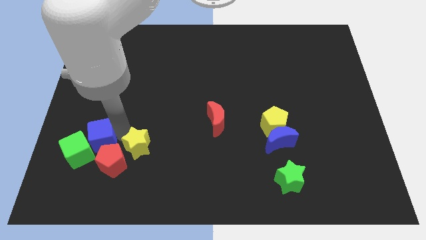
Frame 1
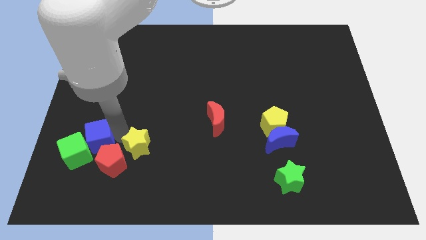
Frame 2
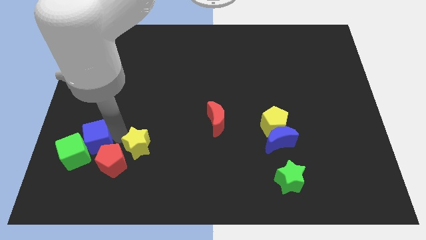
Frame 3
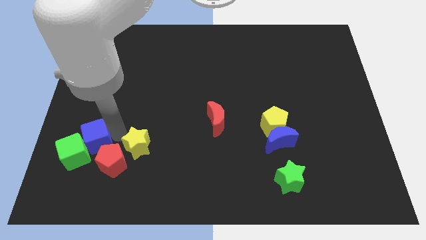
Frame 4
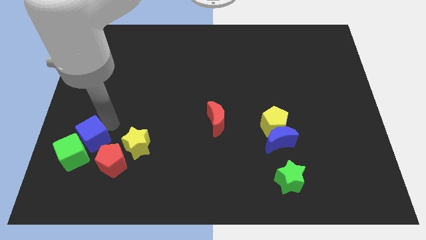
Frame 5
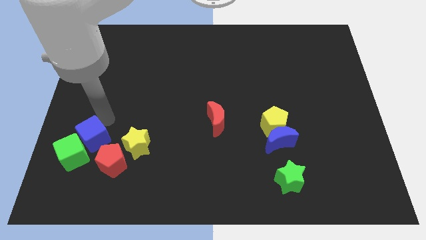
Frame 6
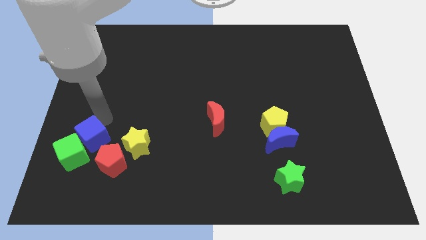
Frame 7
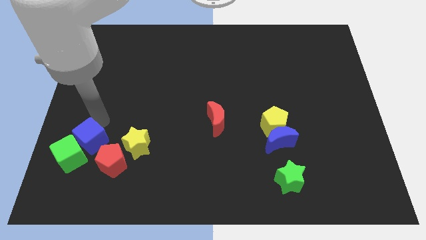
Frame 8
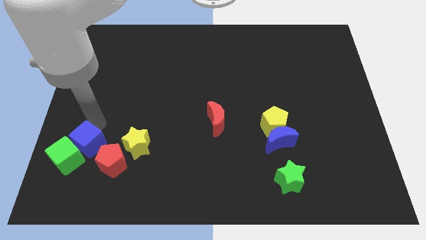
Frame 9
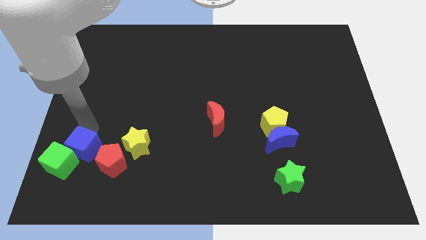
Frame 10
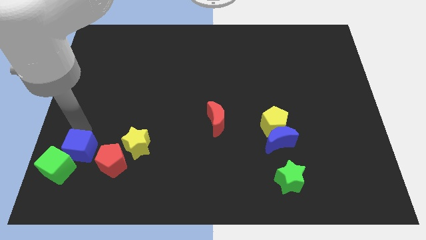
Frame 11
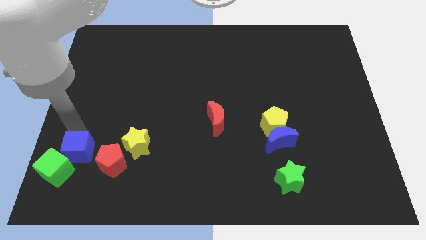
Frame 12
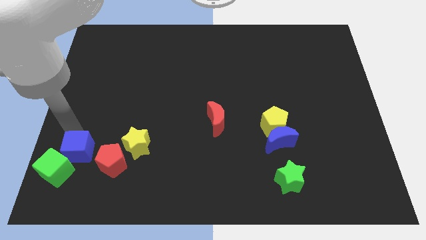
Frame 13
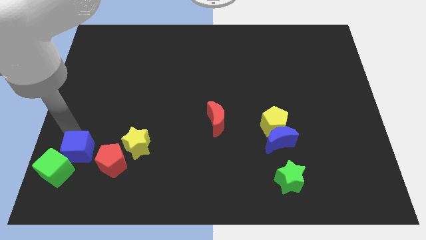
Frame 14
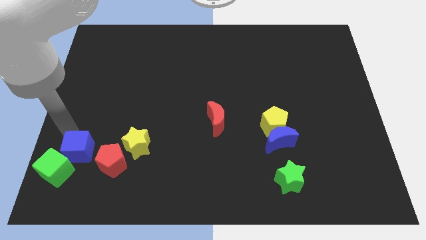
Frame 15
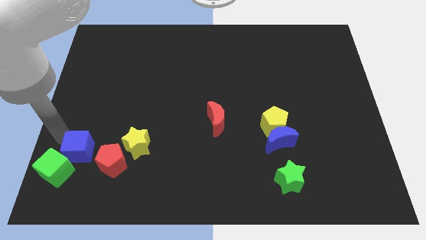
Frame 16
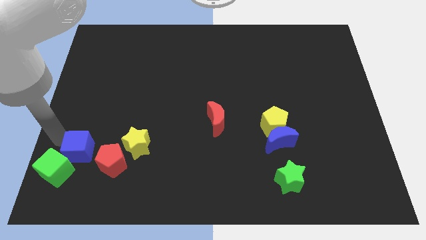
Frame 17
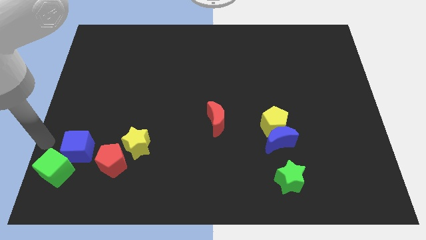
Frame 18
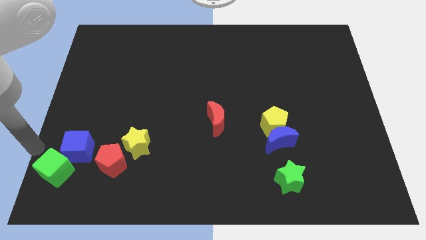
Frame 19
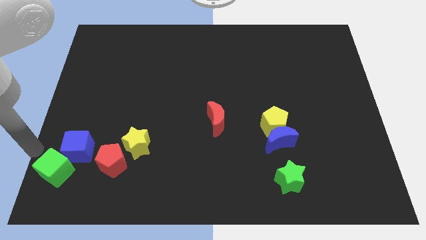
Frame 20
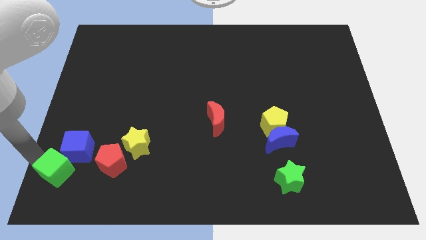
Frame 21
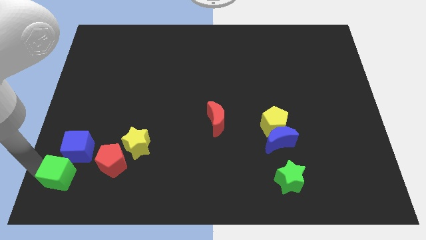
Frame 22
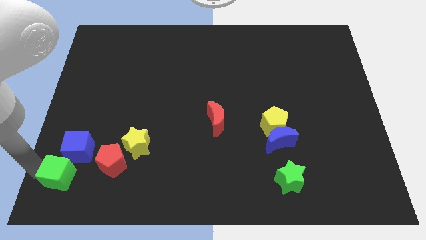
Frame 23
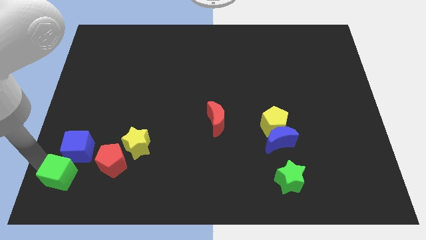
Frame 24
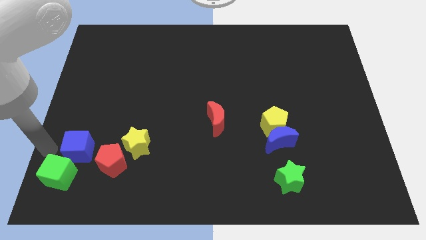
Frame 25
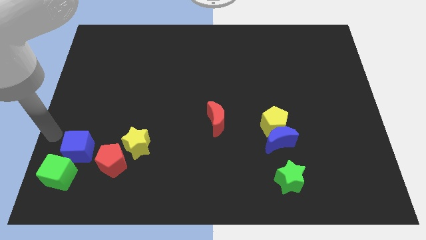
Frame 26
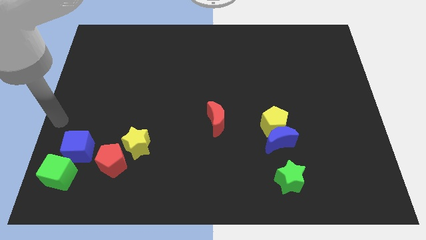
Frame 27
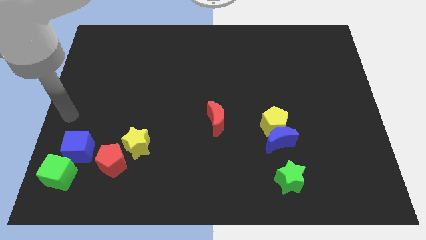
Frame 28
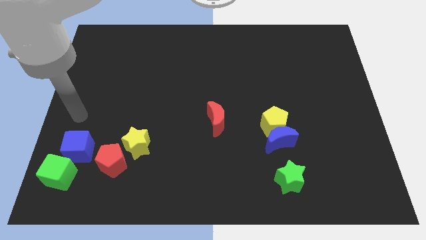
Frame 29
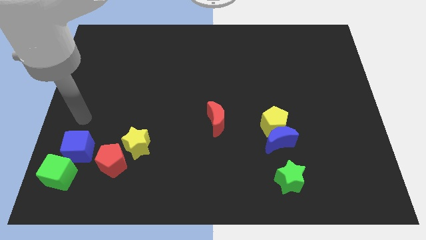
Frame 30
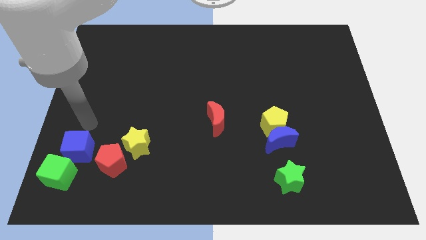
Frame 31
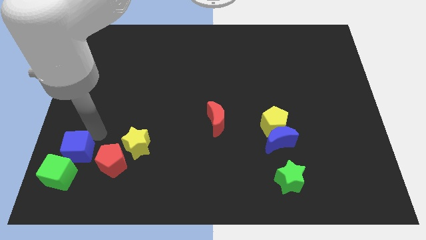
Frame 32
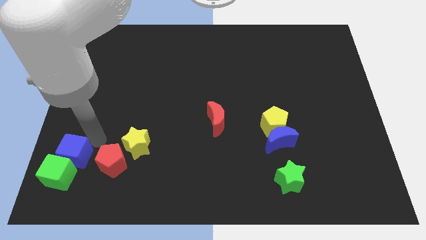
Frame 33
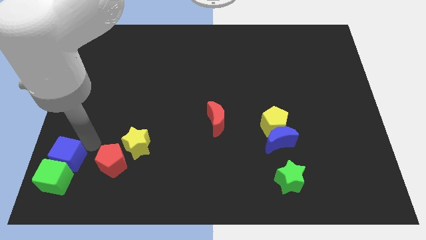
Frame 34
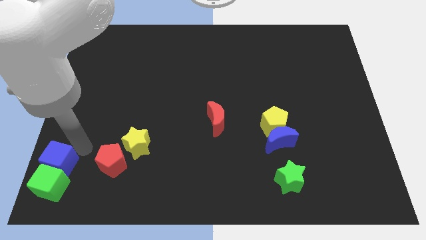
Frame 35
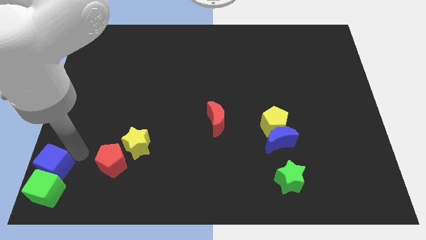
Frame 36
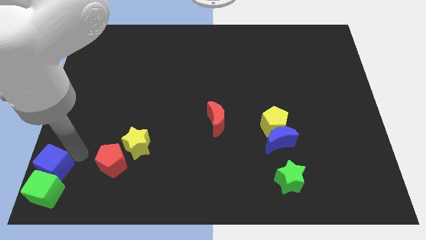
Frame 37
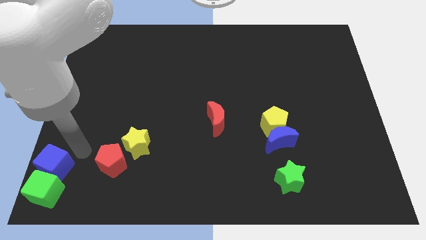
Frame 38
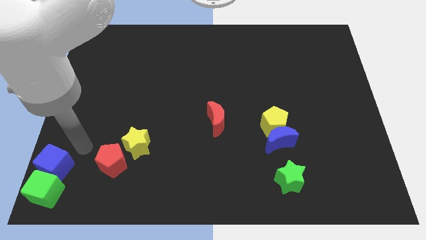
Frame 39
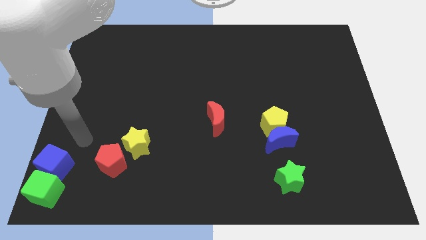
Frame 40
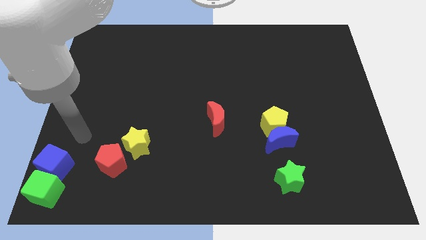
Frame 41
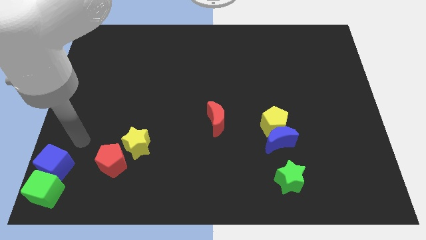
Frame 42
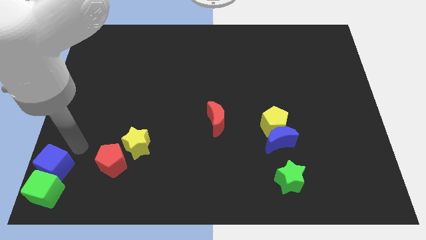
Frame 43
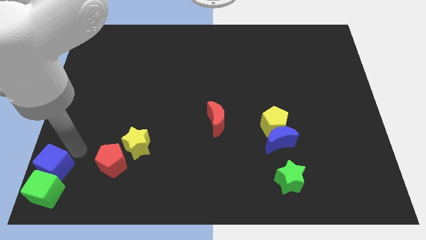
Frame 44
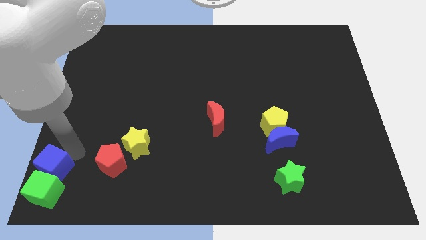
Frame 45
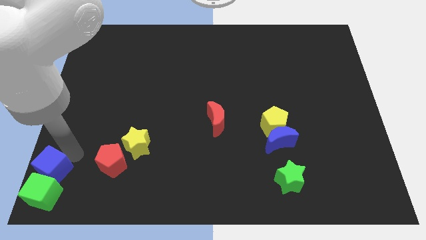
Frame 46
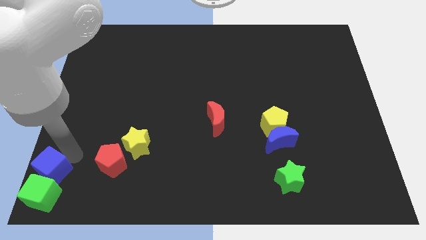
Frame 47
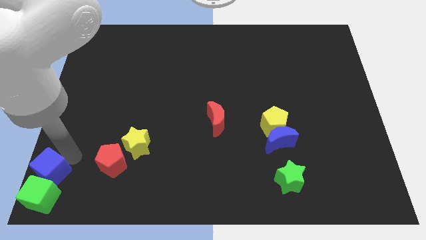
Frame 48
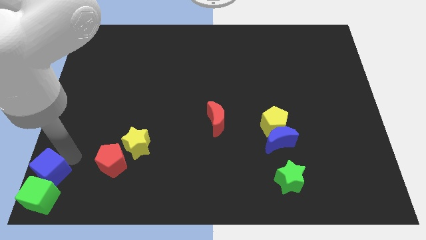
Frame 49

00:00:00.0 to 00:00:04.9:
place the green cube and blue cube at the bottom left corner of the board

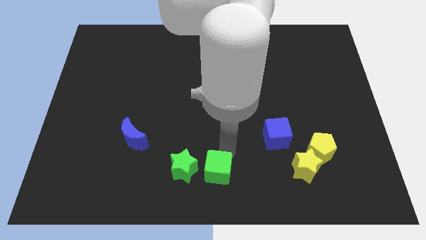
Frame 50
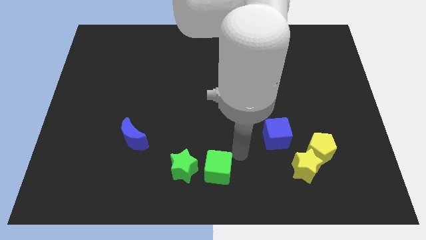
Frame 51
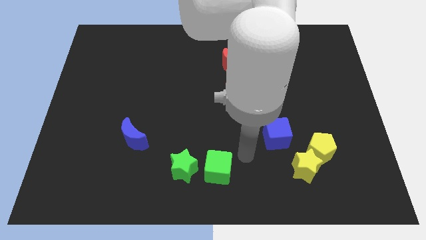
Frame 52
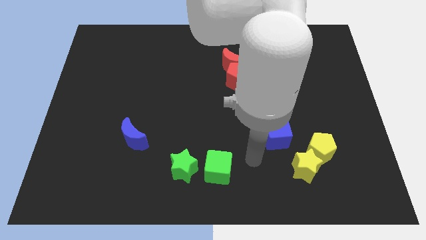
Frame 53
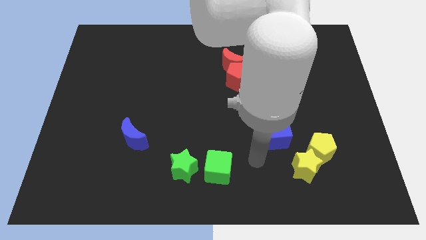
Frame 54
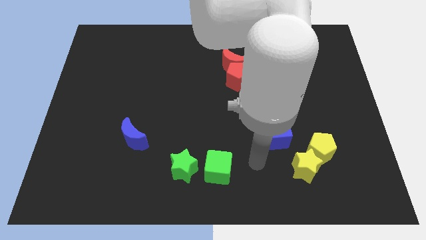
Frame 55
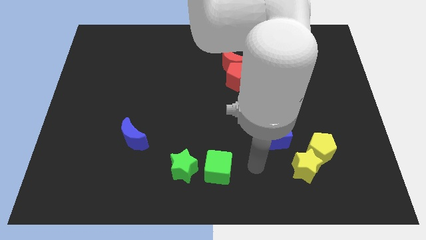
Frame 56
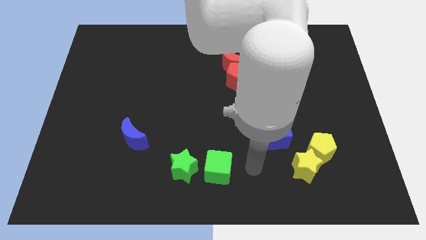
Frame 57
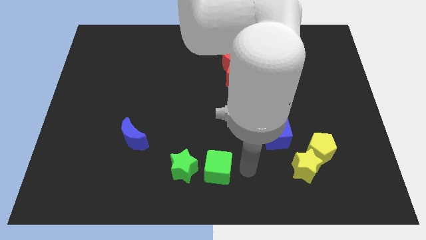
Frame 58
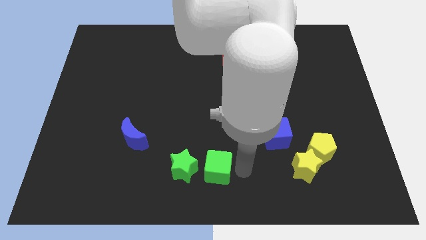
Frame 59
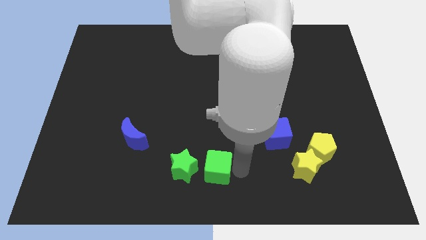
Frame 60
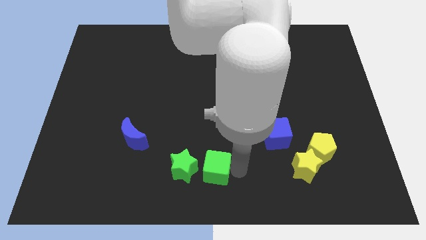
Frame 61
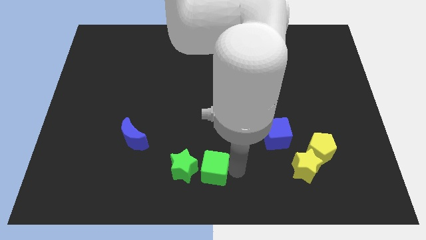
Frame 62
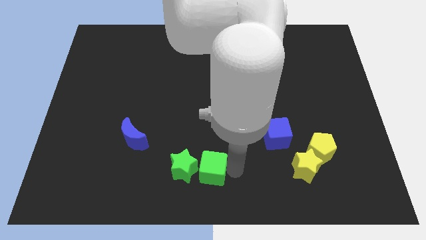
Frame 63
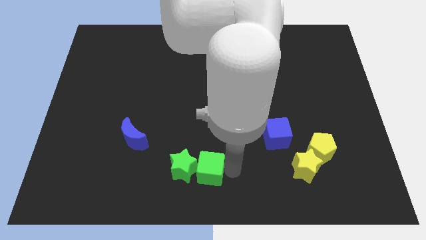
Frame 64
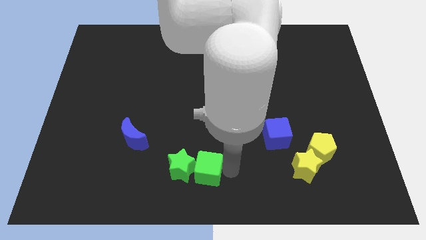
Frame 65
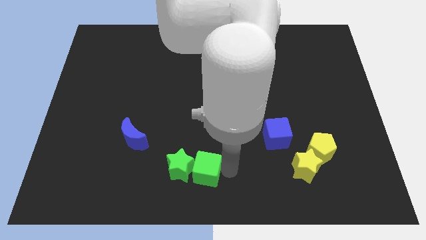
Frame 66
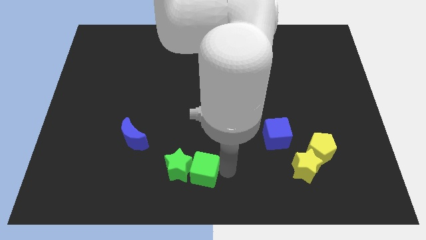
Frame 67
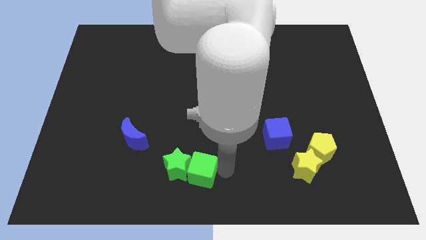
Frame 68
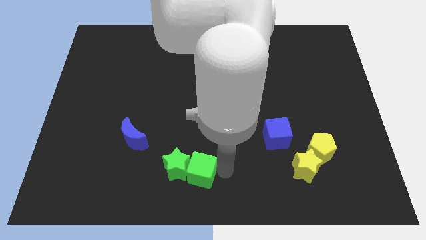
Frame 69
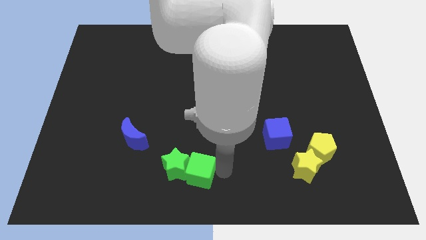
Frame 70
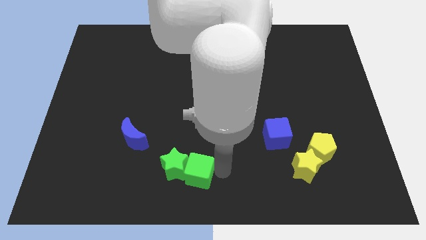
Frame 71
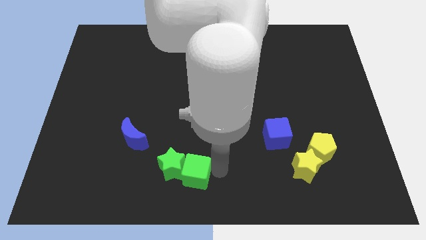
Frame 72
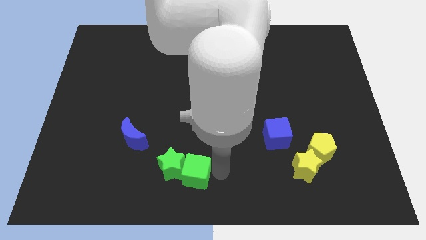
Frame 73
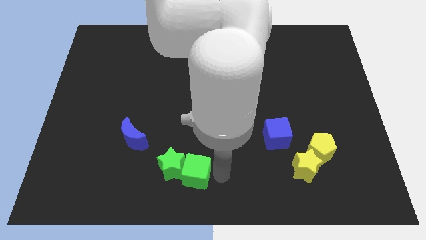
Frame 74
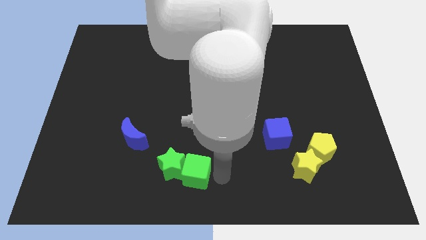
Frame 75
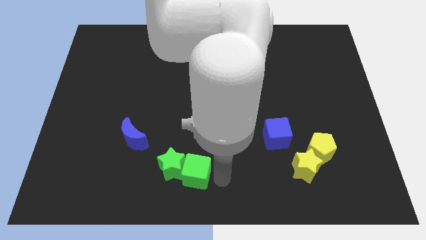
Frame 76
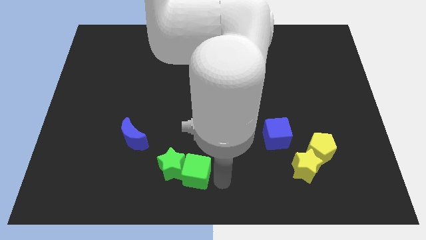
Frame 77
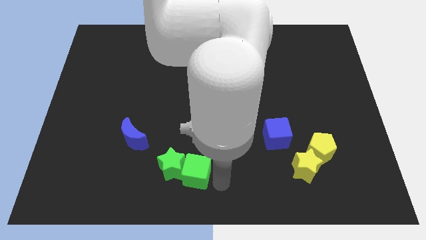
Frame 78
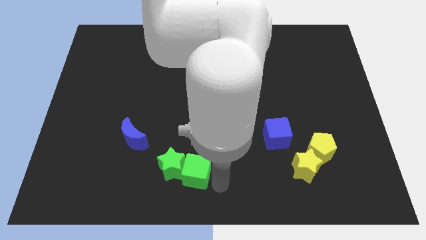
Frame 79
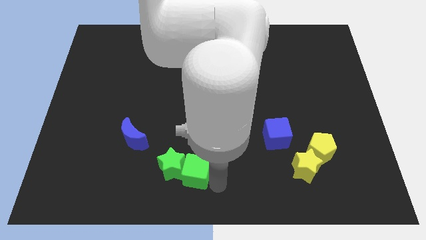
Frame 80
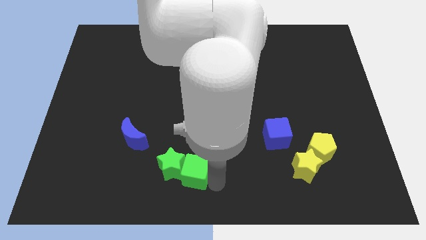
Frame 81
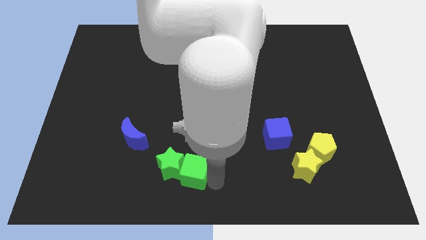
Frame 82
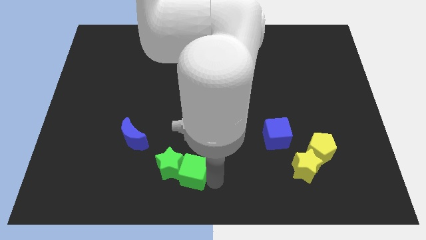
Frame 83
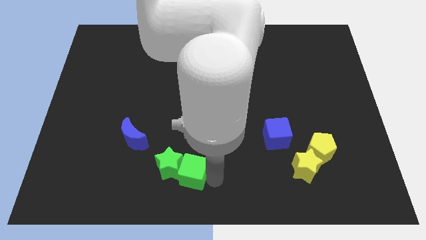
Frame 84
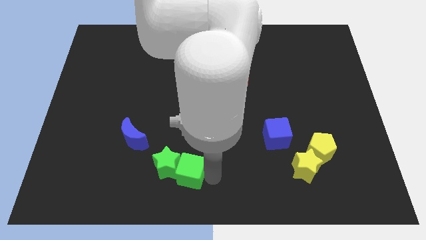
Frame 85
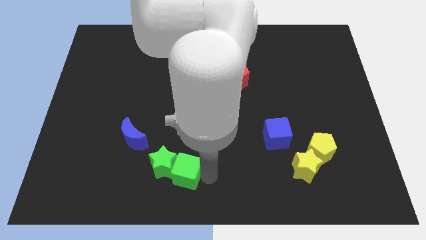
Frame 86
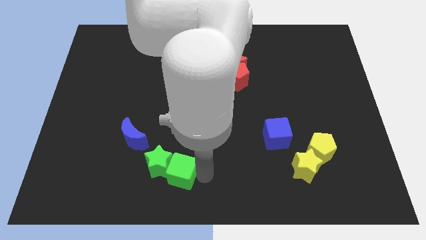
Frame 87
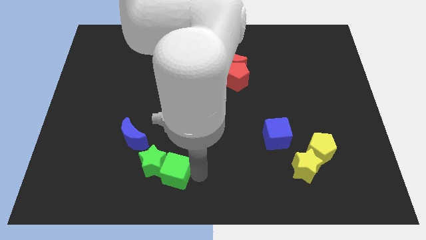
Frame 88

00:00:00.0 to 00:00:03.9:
push the green cube into the green star
